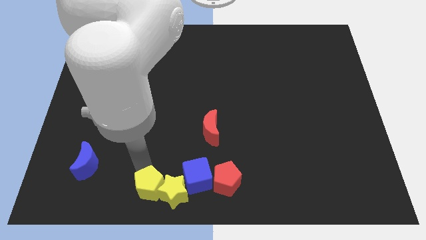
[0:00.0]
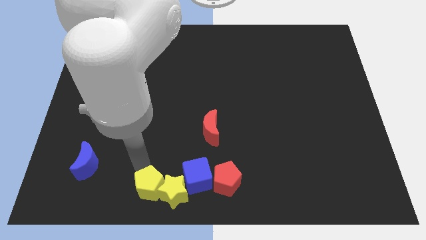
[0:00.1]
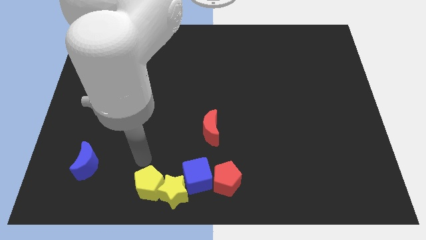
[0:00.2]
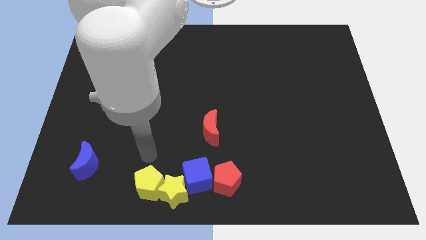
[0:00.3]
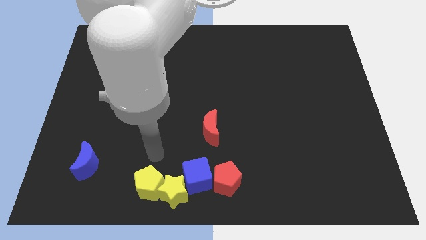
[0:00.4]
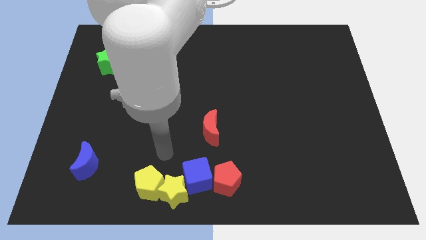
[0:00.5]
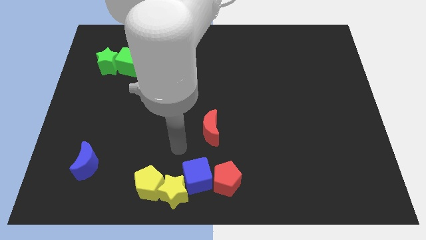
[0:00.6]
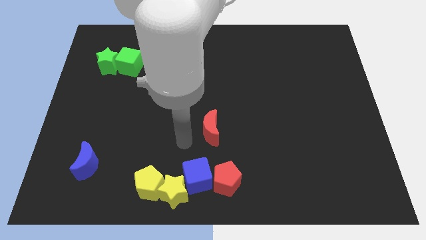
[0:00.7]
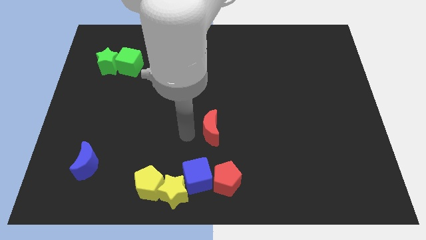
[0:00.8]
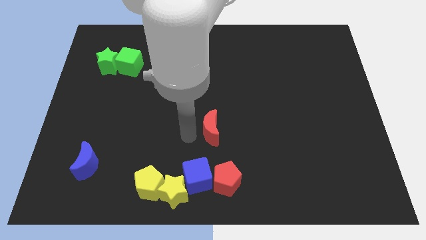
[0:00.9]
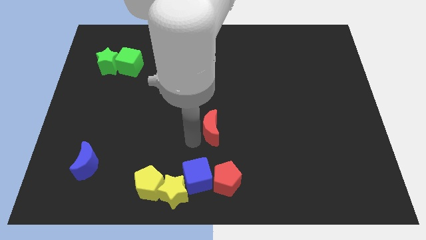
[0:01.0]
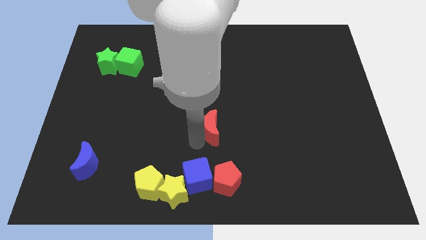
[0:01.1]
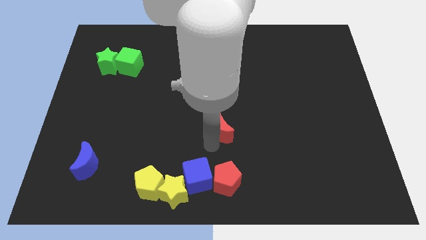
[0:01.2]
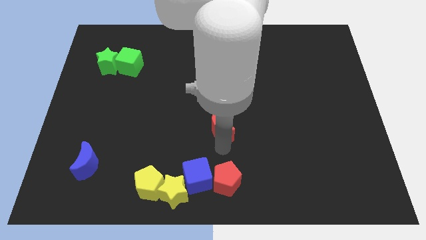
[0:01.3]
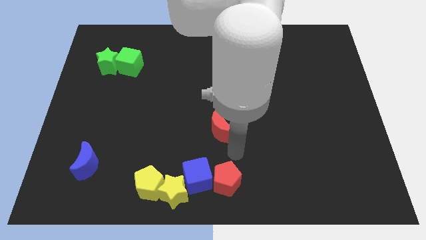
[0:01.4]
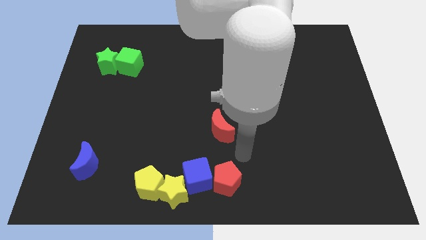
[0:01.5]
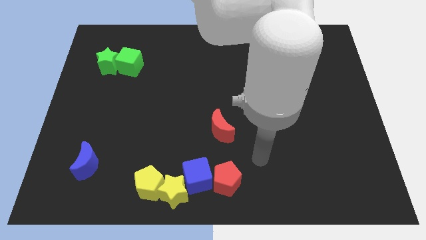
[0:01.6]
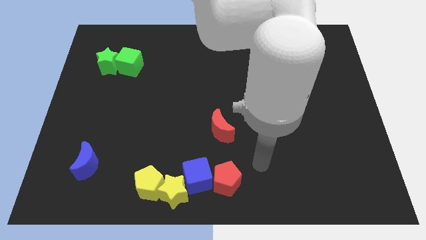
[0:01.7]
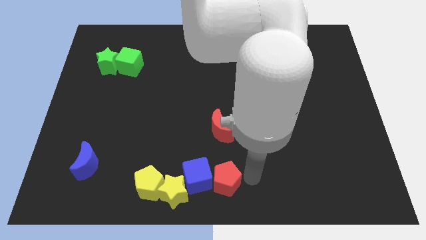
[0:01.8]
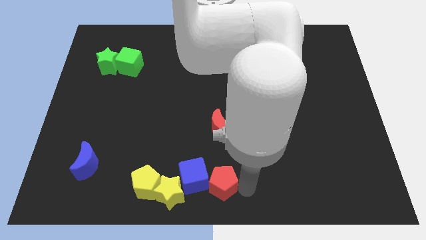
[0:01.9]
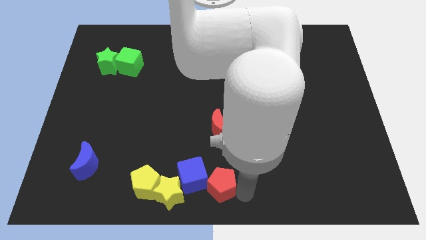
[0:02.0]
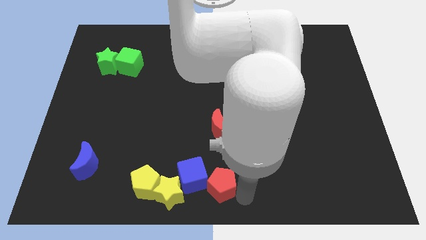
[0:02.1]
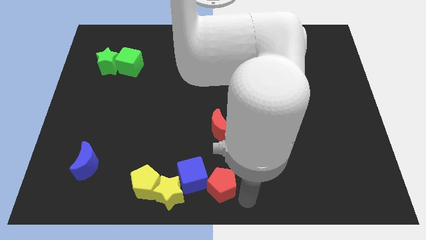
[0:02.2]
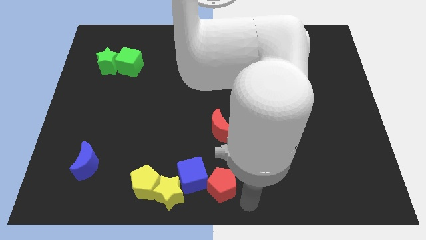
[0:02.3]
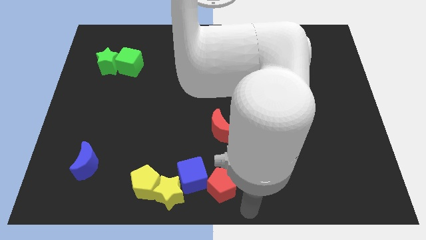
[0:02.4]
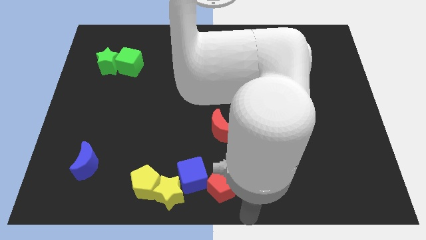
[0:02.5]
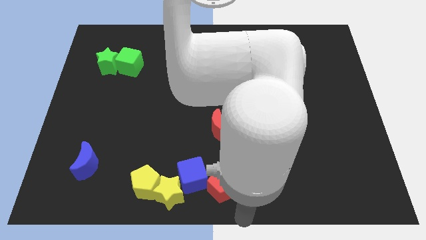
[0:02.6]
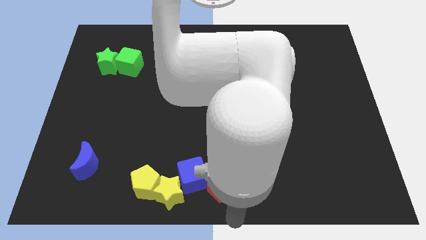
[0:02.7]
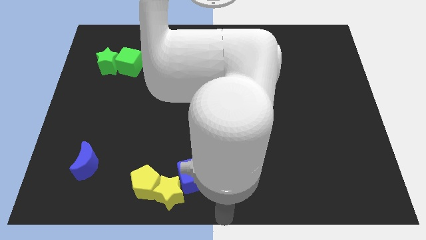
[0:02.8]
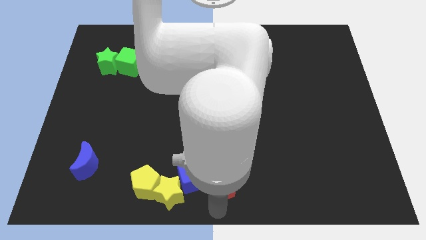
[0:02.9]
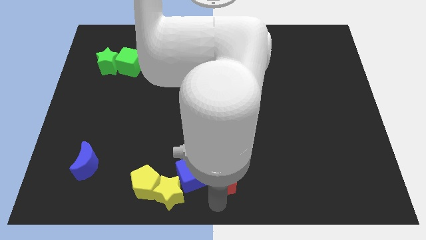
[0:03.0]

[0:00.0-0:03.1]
move your arm towards the red pentagon on the bottom center of the mat

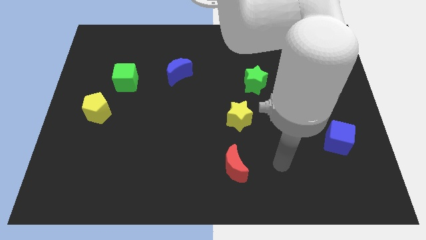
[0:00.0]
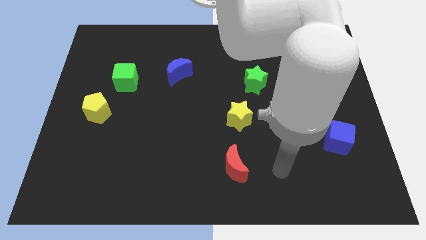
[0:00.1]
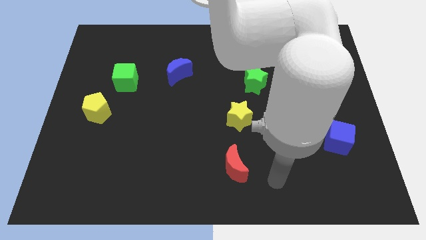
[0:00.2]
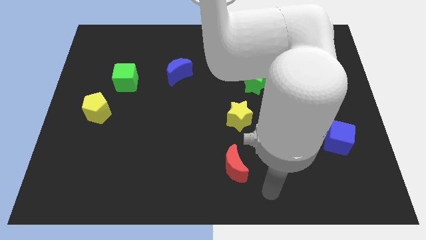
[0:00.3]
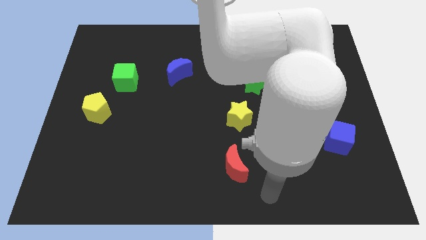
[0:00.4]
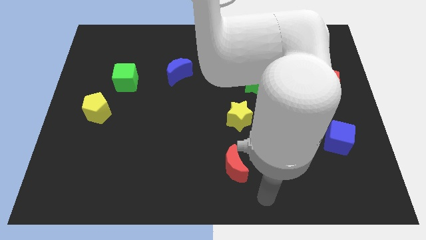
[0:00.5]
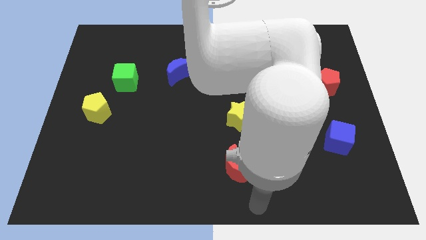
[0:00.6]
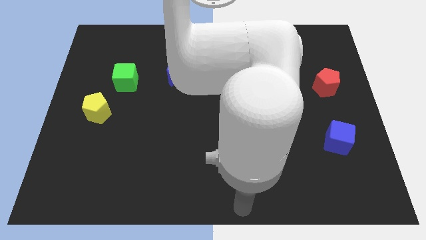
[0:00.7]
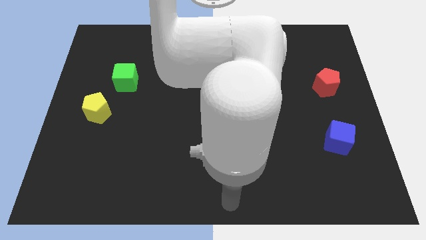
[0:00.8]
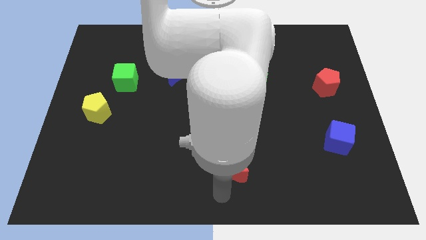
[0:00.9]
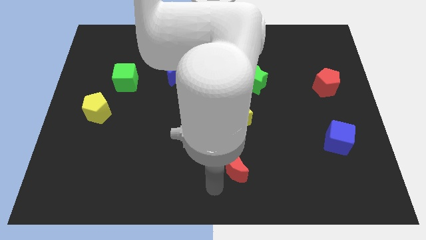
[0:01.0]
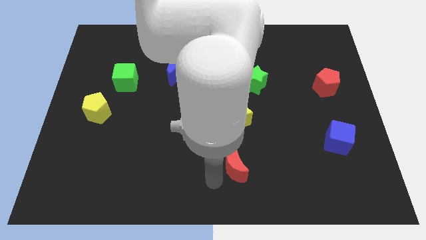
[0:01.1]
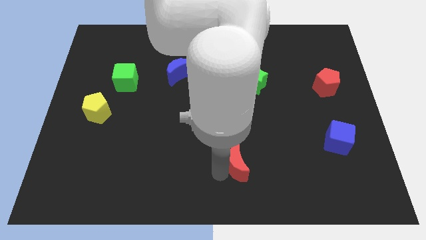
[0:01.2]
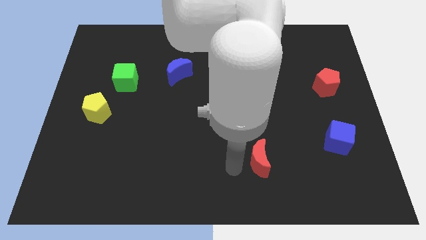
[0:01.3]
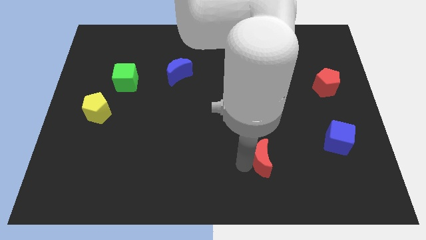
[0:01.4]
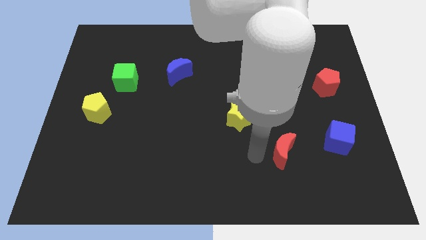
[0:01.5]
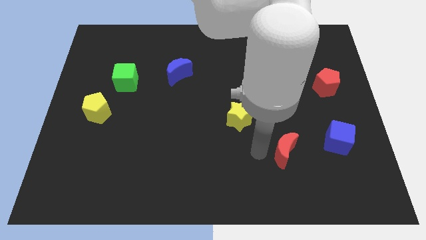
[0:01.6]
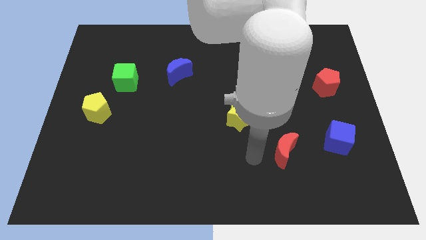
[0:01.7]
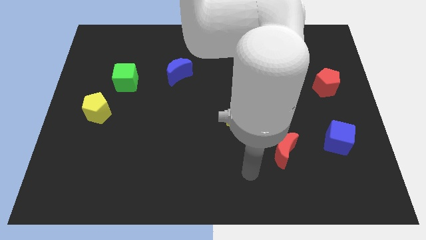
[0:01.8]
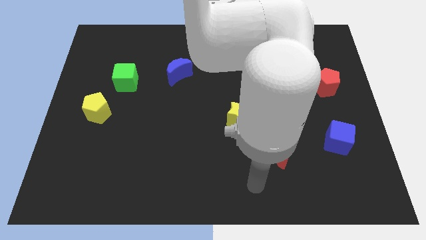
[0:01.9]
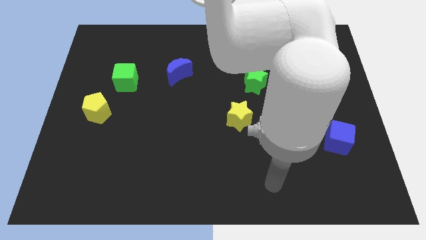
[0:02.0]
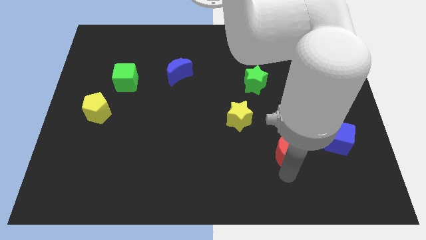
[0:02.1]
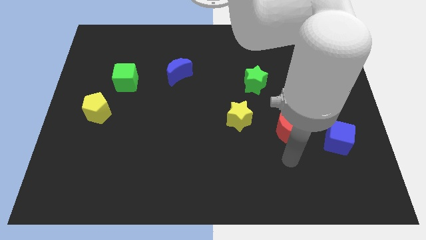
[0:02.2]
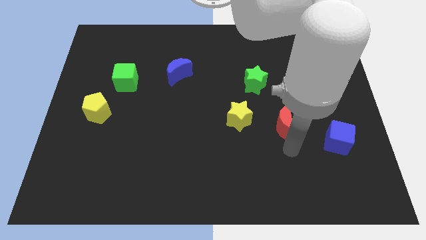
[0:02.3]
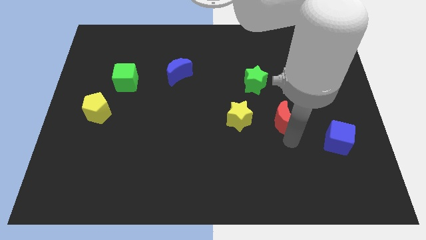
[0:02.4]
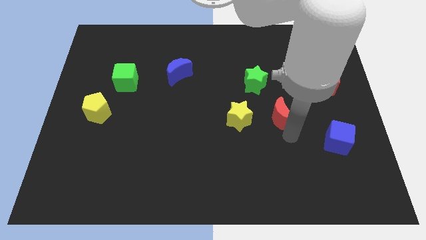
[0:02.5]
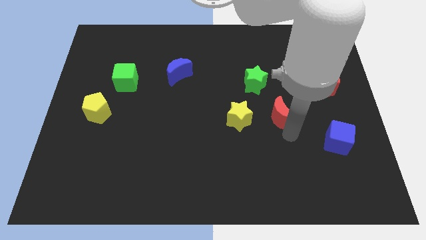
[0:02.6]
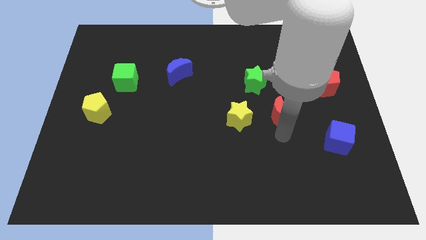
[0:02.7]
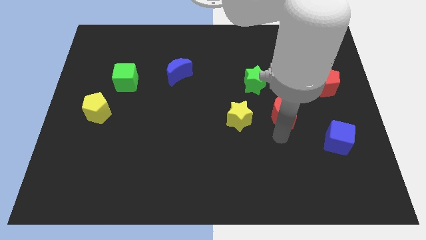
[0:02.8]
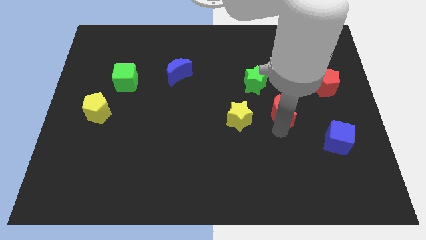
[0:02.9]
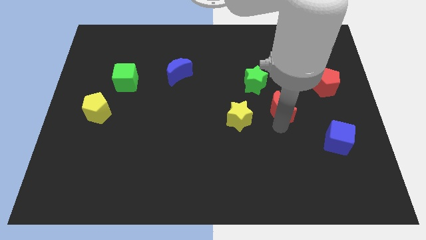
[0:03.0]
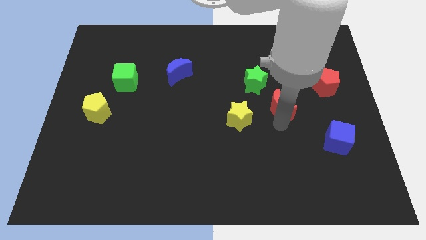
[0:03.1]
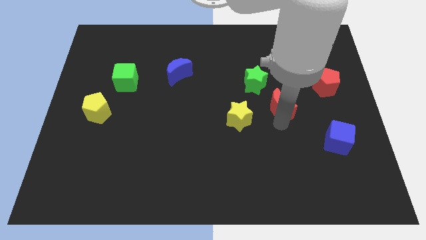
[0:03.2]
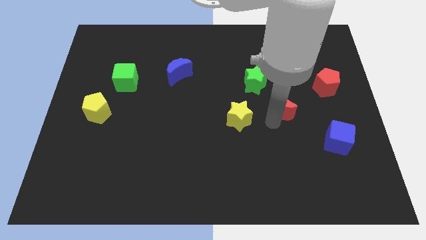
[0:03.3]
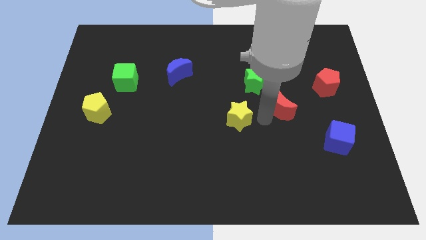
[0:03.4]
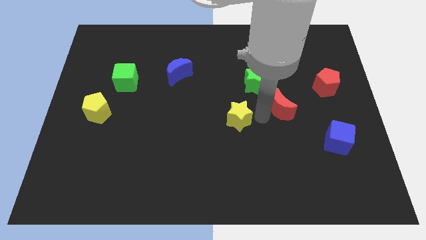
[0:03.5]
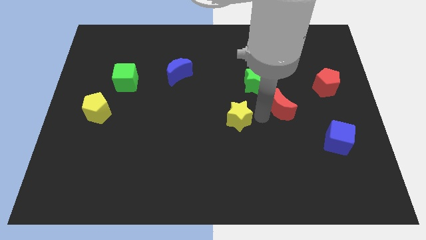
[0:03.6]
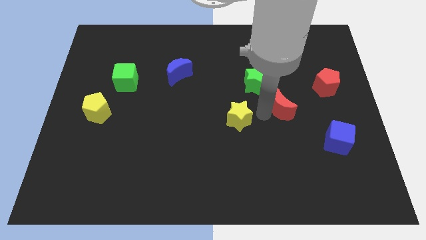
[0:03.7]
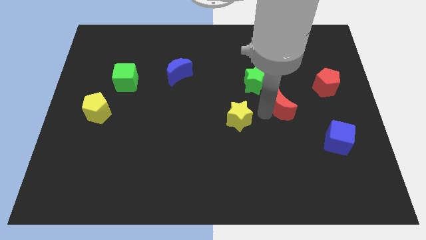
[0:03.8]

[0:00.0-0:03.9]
place red moon to the bottom right of green star

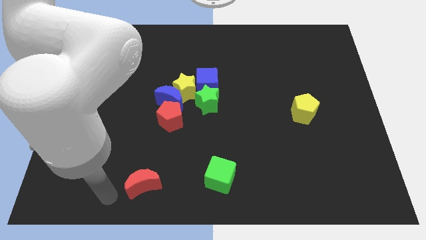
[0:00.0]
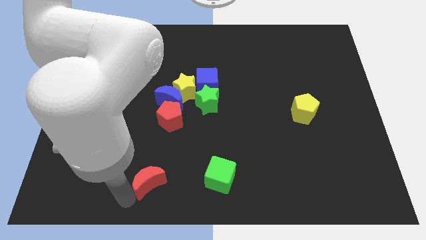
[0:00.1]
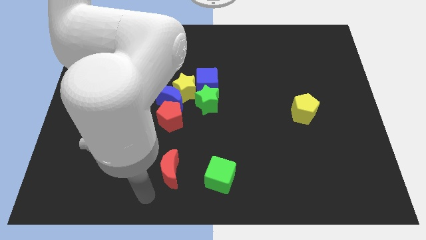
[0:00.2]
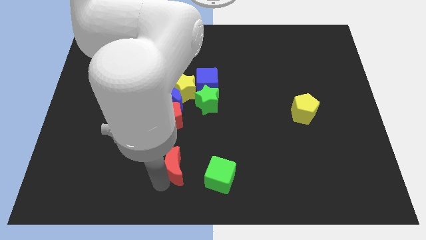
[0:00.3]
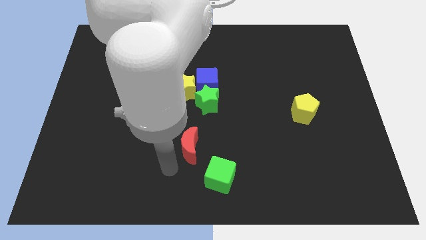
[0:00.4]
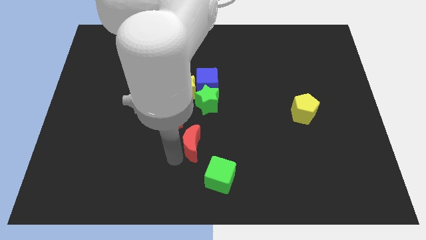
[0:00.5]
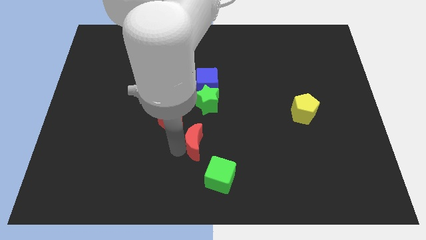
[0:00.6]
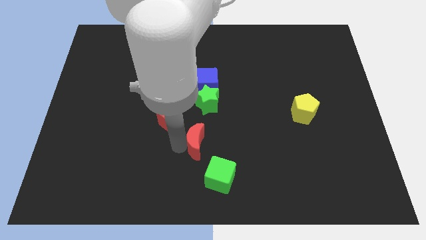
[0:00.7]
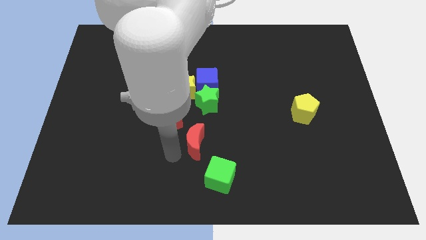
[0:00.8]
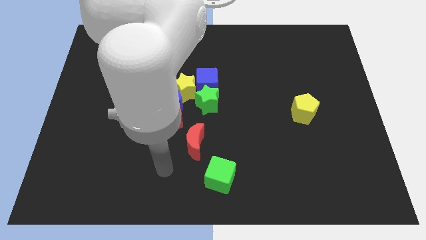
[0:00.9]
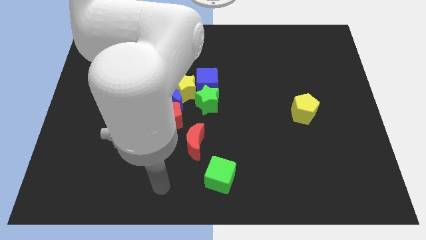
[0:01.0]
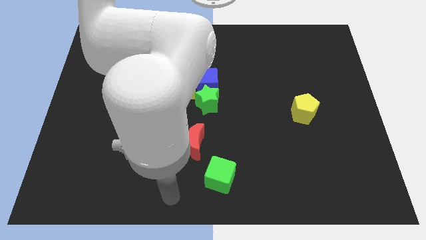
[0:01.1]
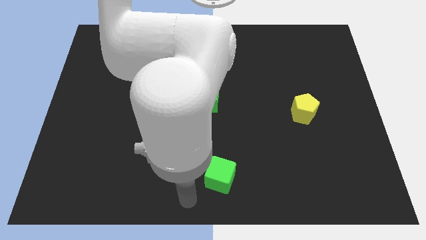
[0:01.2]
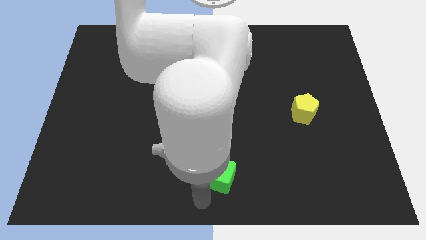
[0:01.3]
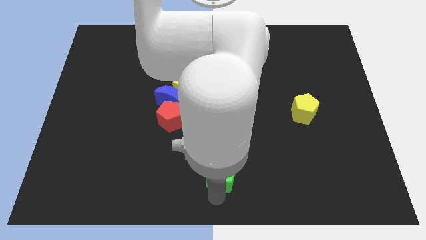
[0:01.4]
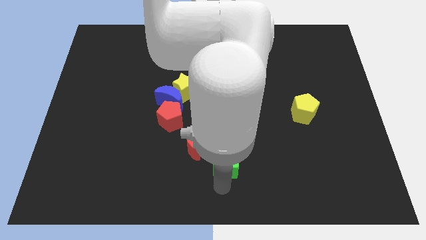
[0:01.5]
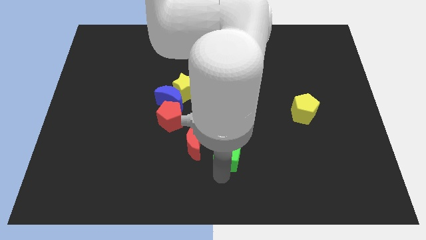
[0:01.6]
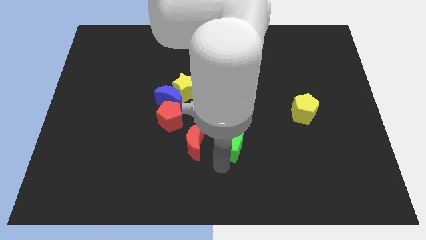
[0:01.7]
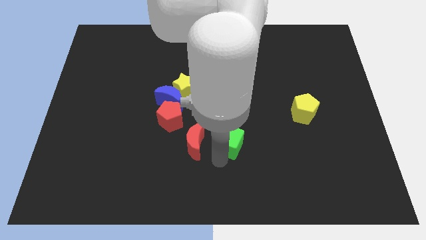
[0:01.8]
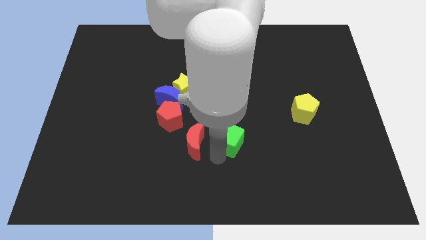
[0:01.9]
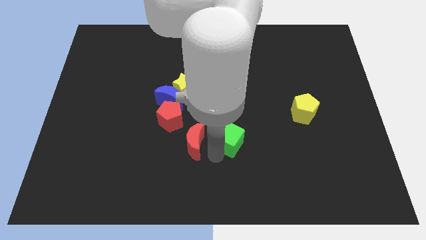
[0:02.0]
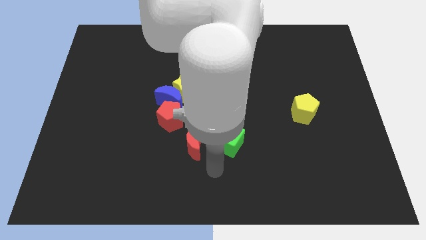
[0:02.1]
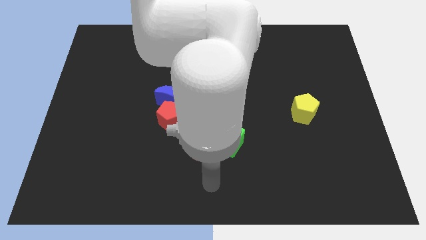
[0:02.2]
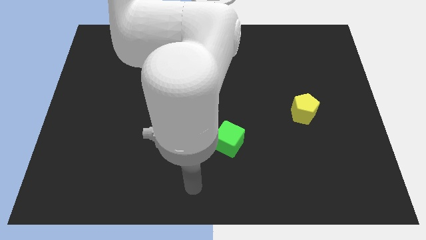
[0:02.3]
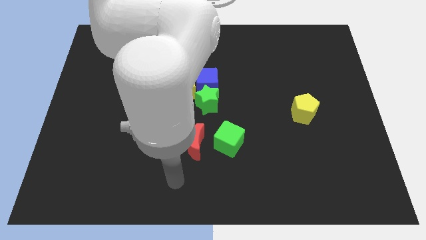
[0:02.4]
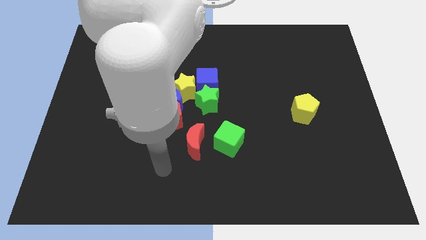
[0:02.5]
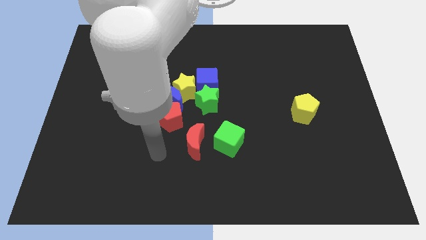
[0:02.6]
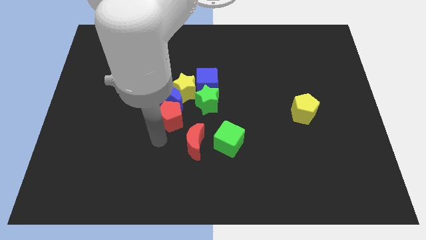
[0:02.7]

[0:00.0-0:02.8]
push the red moon slightly upwards
